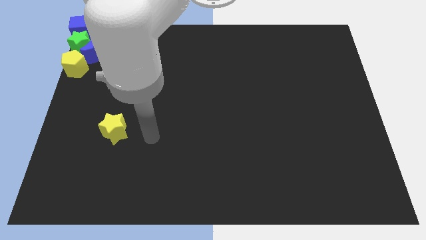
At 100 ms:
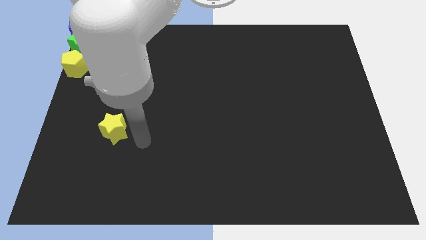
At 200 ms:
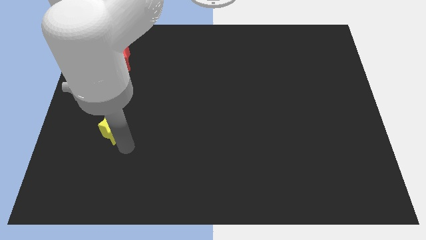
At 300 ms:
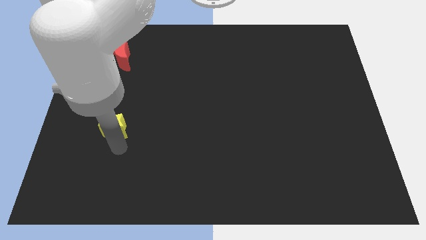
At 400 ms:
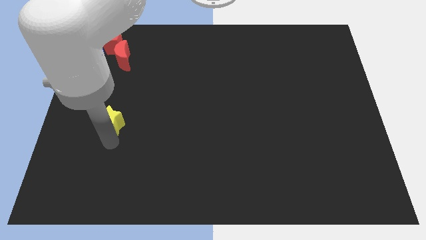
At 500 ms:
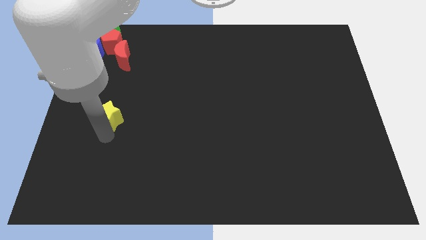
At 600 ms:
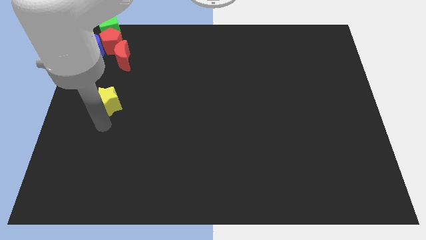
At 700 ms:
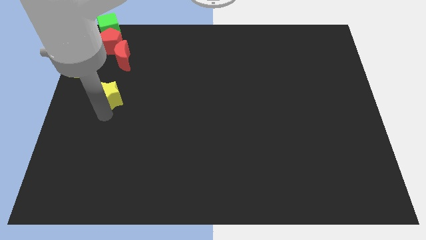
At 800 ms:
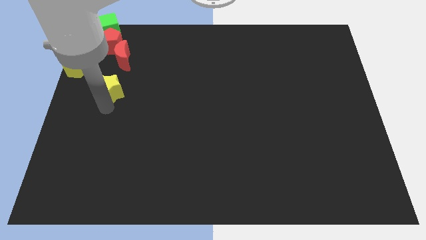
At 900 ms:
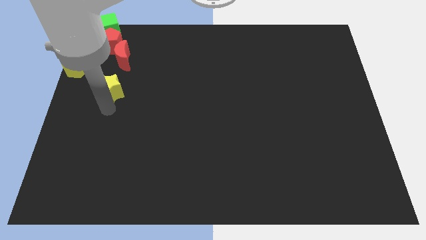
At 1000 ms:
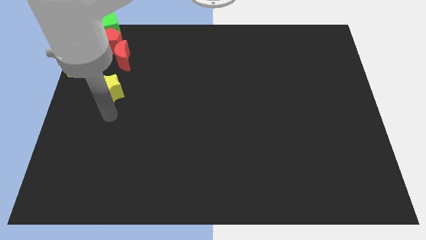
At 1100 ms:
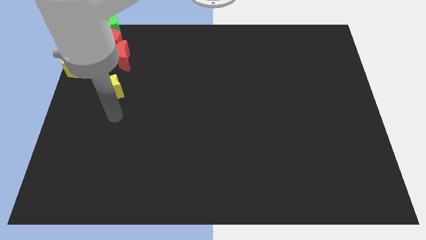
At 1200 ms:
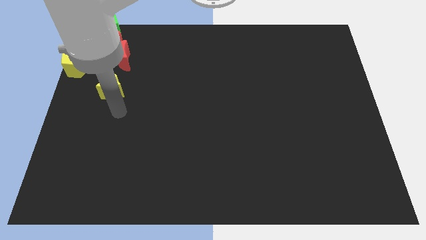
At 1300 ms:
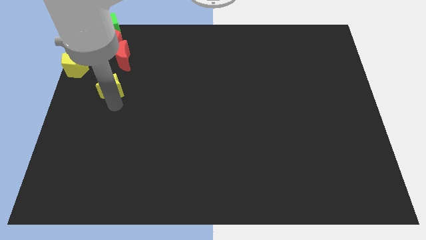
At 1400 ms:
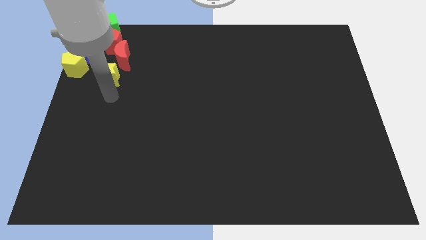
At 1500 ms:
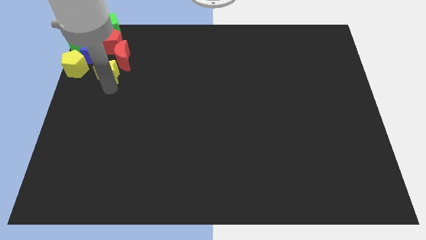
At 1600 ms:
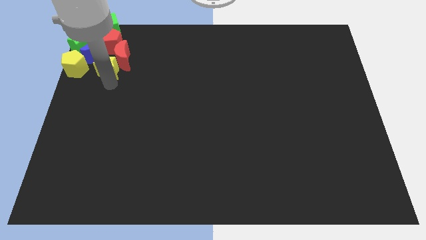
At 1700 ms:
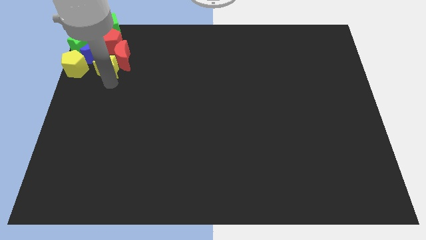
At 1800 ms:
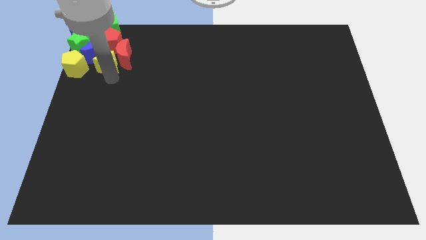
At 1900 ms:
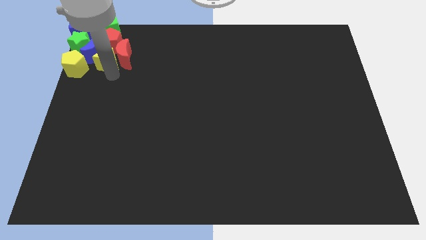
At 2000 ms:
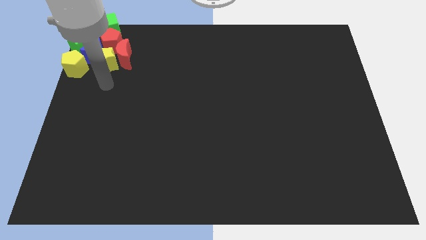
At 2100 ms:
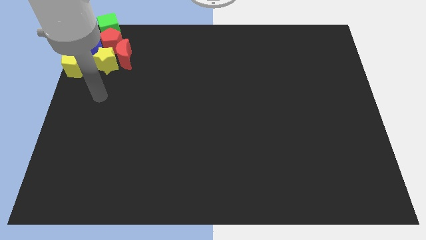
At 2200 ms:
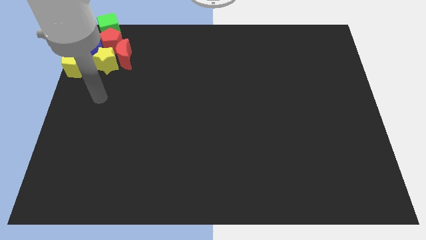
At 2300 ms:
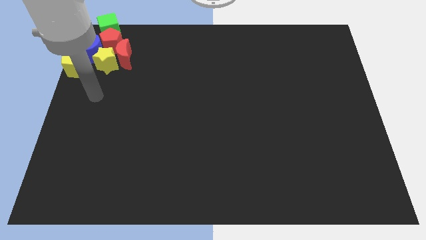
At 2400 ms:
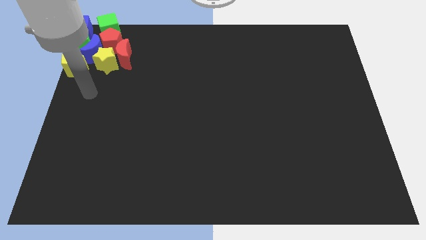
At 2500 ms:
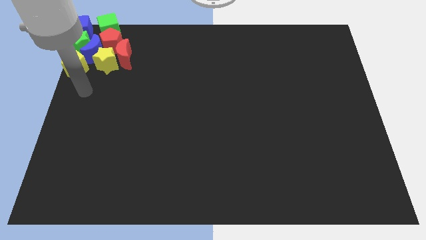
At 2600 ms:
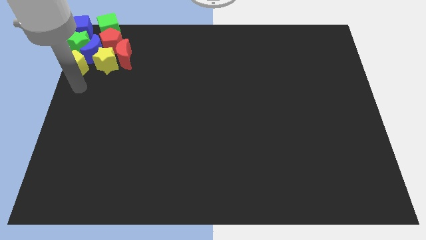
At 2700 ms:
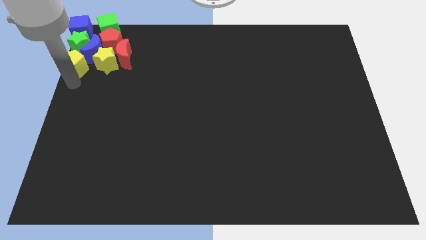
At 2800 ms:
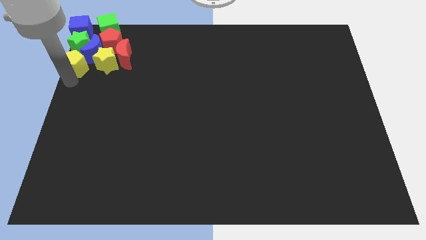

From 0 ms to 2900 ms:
place the yellow star right to the yellow pentagon

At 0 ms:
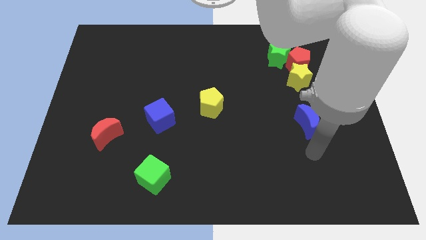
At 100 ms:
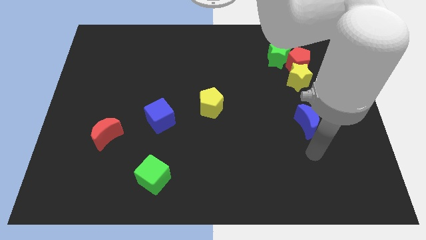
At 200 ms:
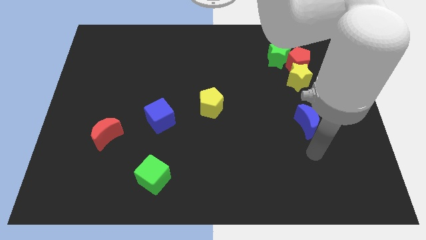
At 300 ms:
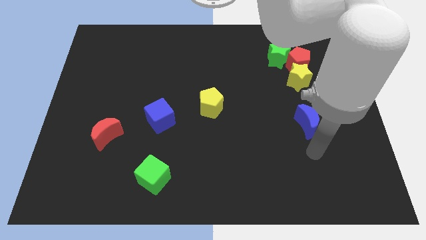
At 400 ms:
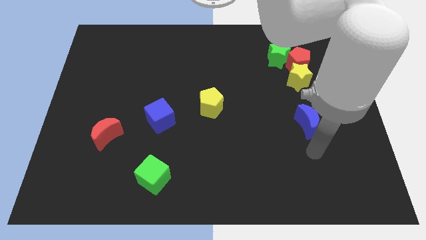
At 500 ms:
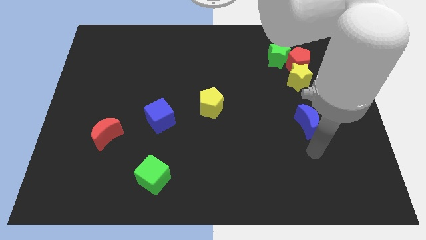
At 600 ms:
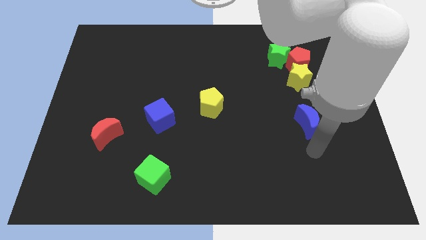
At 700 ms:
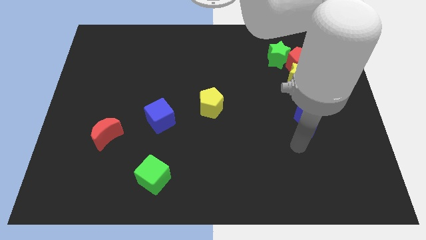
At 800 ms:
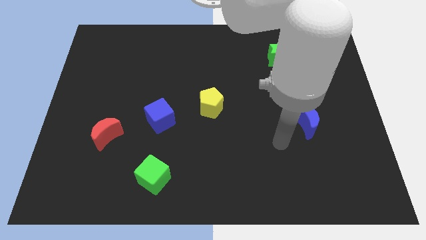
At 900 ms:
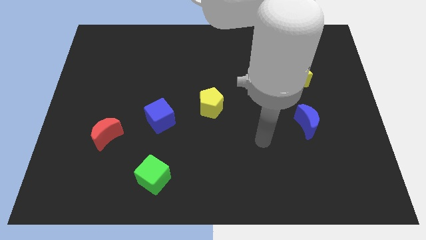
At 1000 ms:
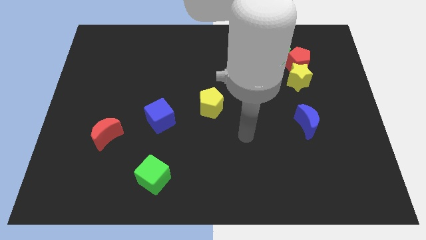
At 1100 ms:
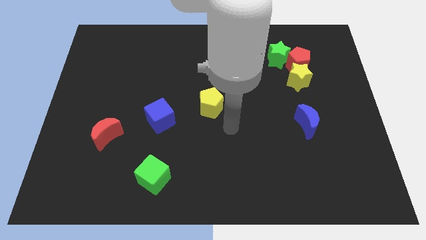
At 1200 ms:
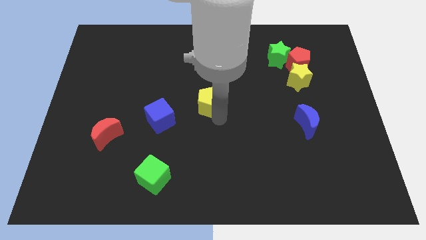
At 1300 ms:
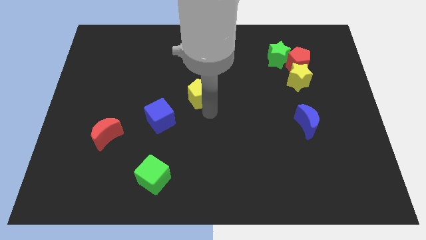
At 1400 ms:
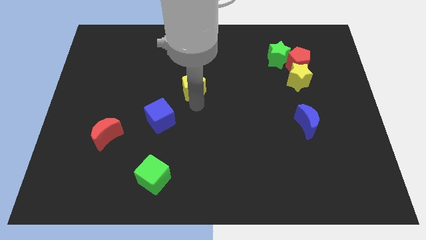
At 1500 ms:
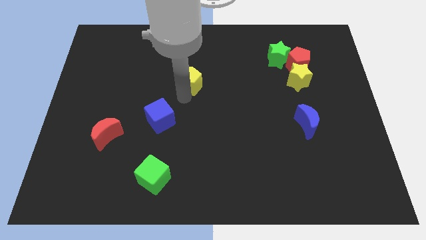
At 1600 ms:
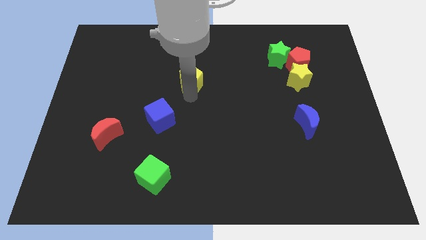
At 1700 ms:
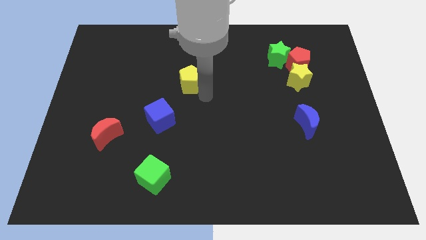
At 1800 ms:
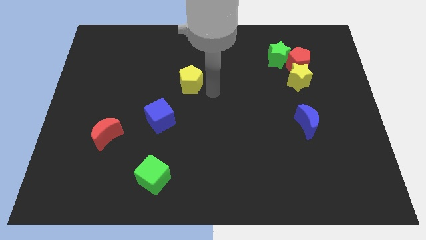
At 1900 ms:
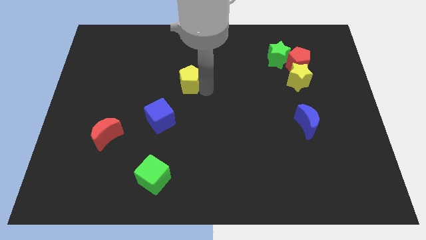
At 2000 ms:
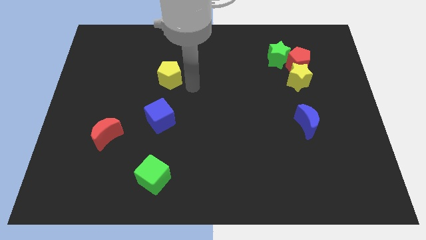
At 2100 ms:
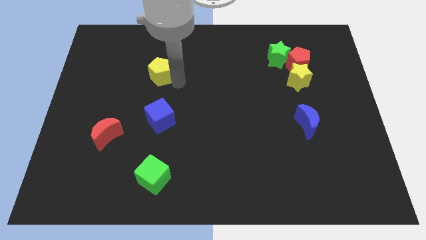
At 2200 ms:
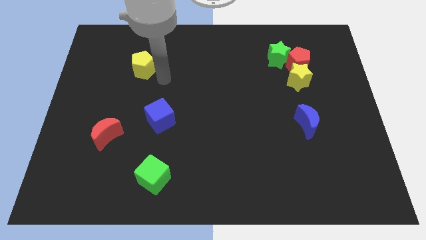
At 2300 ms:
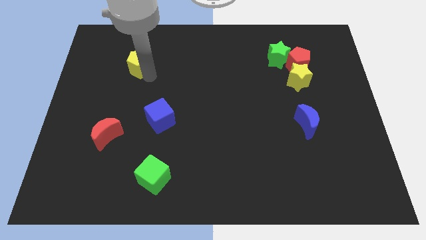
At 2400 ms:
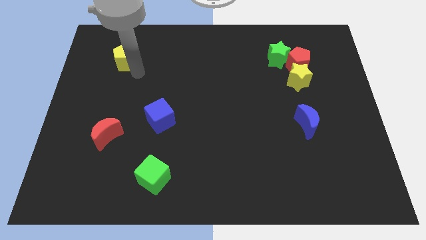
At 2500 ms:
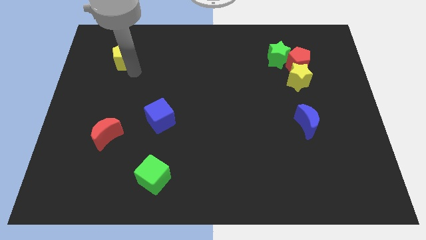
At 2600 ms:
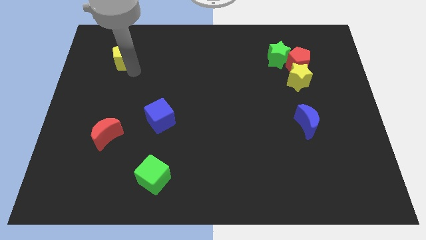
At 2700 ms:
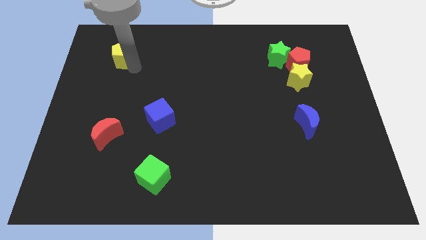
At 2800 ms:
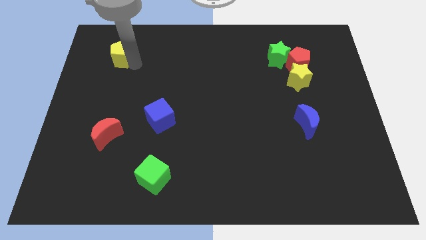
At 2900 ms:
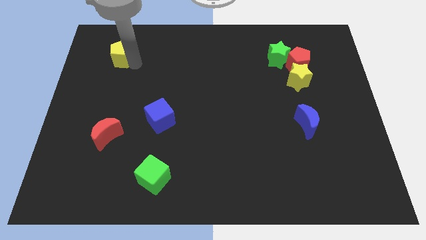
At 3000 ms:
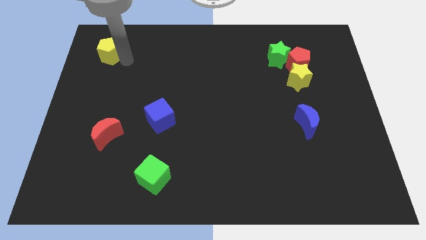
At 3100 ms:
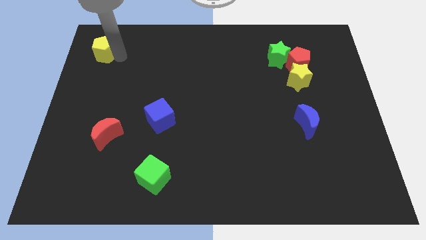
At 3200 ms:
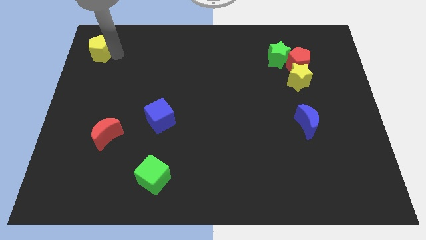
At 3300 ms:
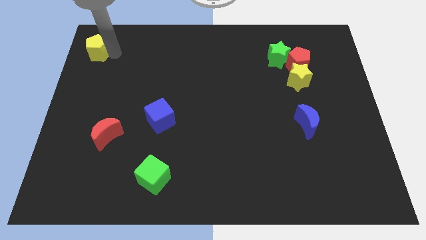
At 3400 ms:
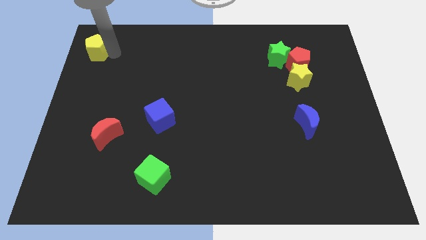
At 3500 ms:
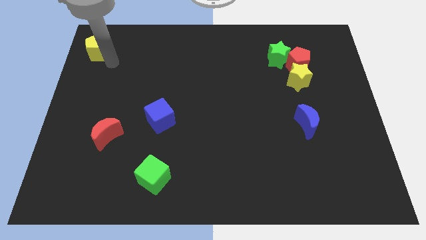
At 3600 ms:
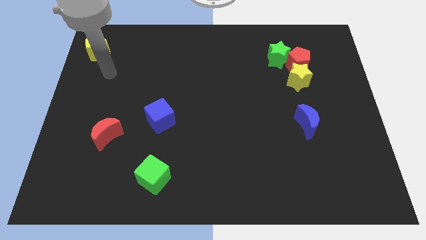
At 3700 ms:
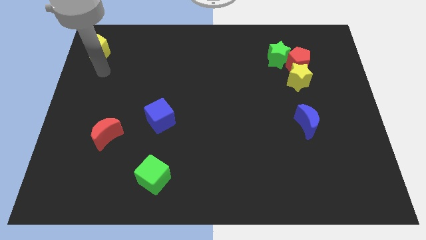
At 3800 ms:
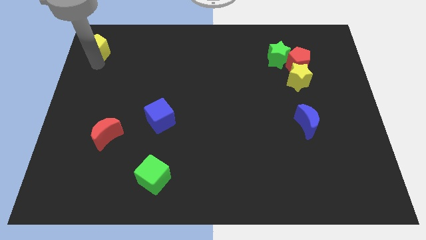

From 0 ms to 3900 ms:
move the yellow pentagon towards the top left

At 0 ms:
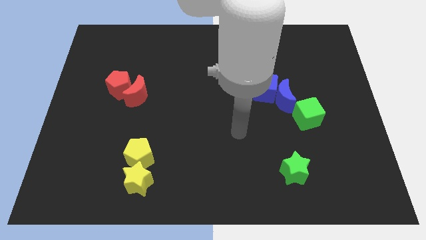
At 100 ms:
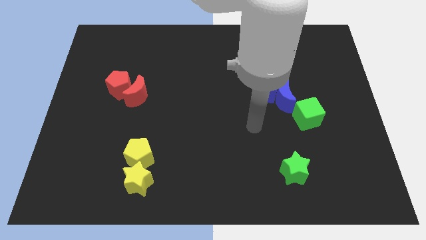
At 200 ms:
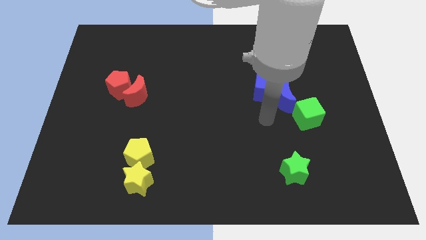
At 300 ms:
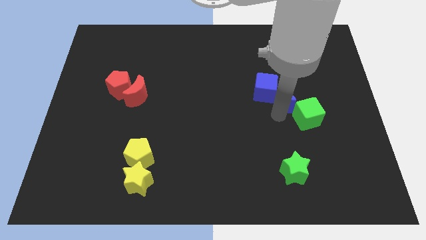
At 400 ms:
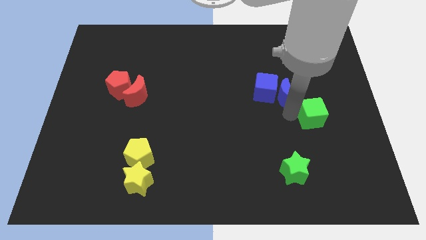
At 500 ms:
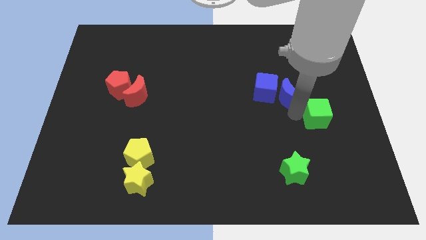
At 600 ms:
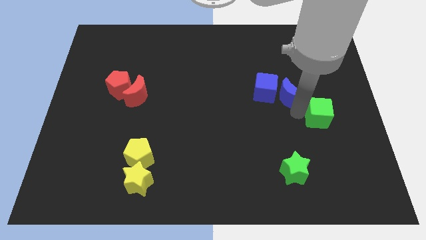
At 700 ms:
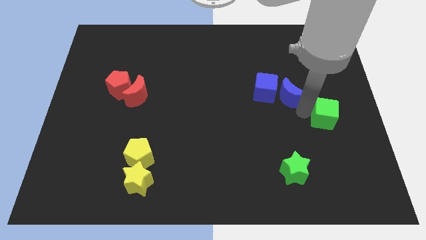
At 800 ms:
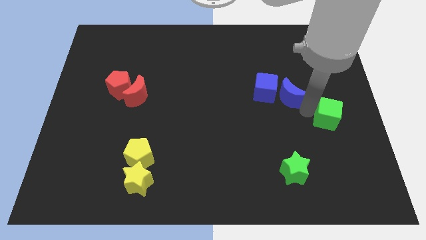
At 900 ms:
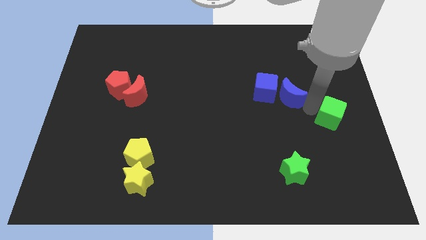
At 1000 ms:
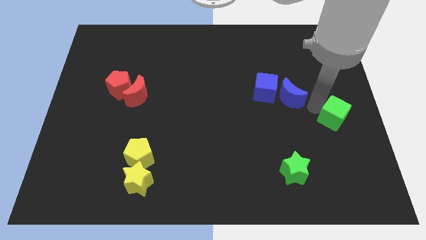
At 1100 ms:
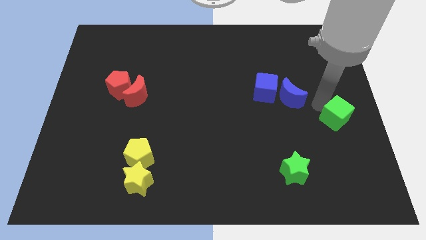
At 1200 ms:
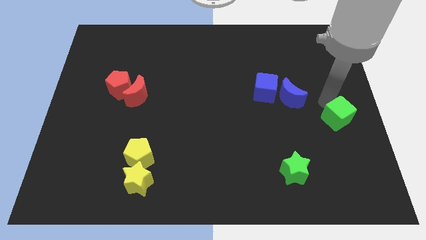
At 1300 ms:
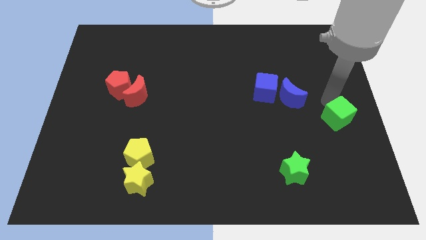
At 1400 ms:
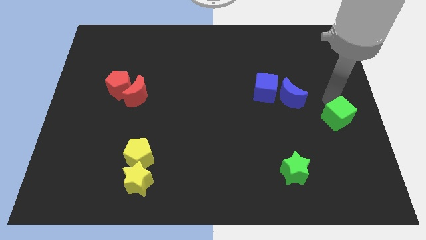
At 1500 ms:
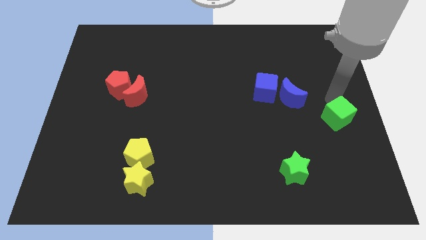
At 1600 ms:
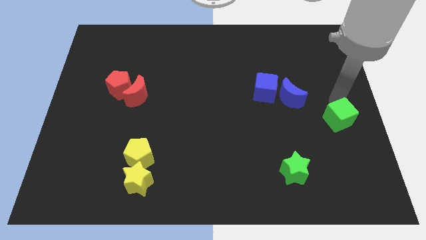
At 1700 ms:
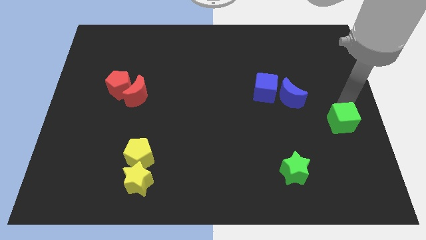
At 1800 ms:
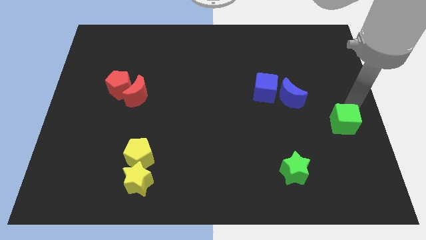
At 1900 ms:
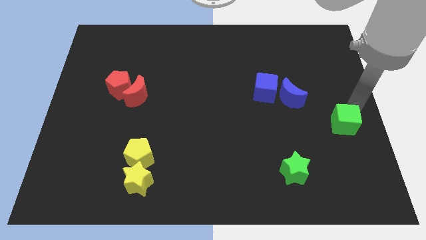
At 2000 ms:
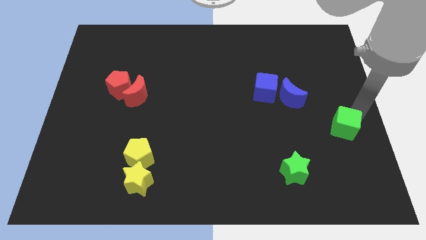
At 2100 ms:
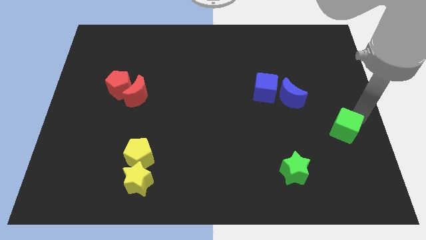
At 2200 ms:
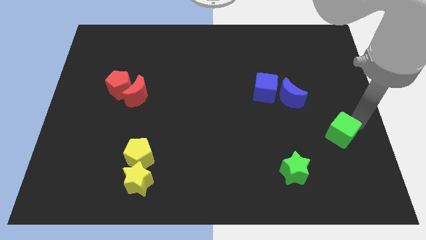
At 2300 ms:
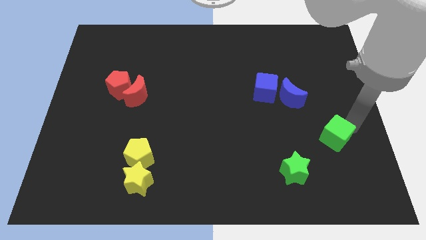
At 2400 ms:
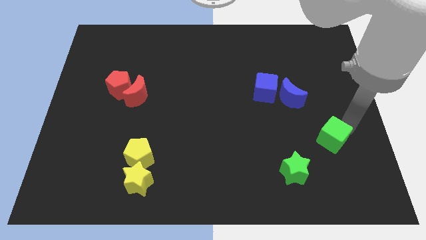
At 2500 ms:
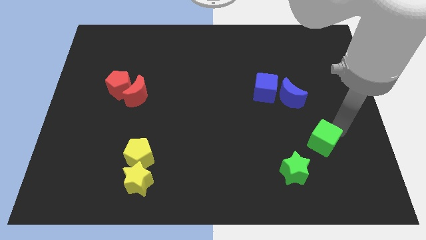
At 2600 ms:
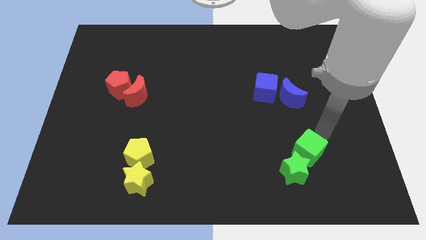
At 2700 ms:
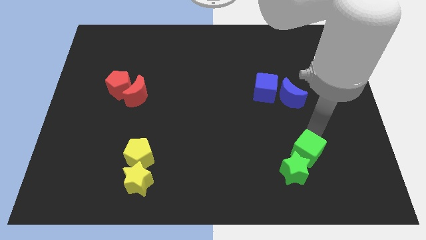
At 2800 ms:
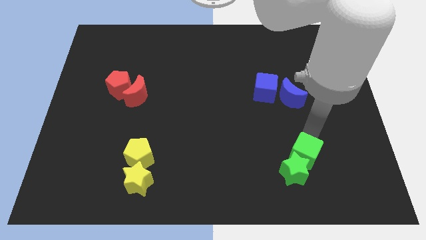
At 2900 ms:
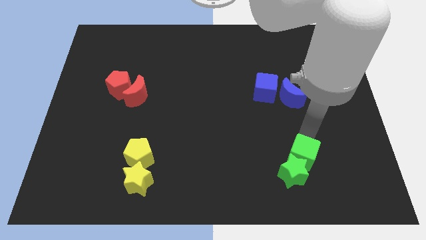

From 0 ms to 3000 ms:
separate green cube from blue moon
